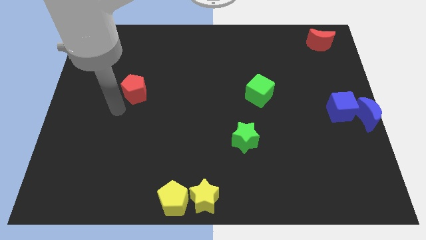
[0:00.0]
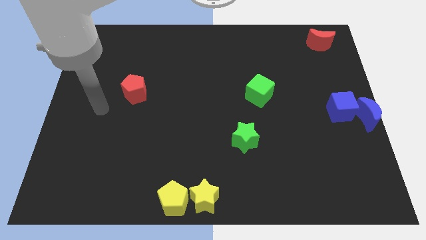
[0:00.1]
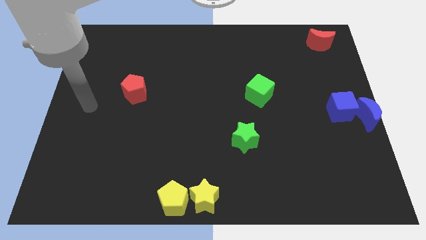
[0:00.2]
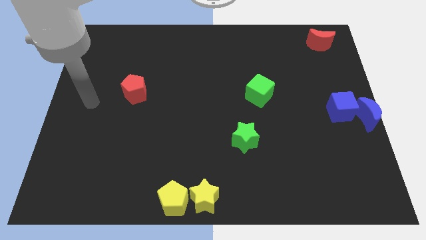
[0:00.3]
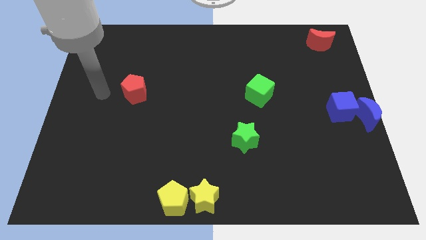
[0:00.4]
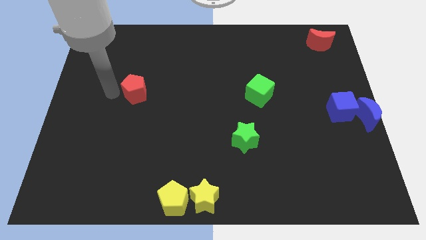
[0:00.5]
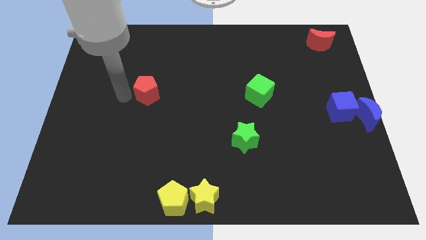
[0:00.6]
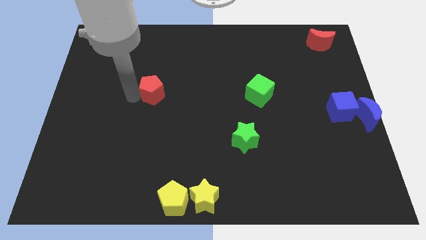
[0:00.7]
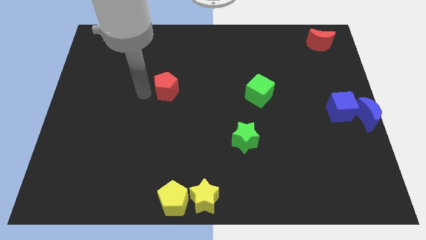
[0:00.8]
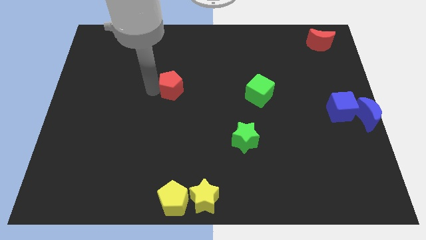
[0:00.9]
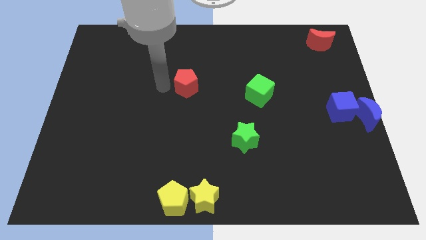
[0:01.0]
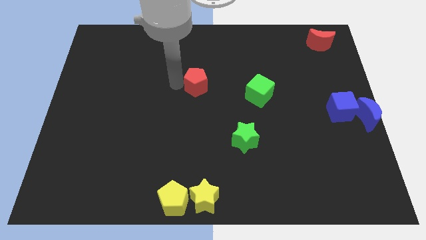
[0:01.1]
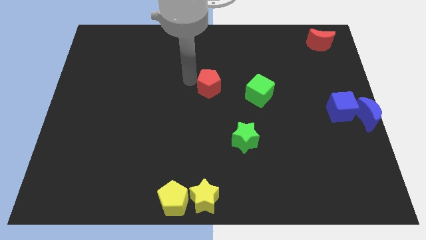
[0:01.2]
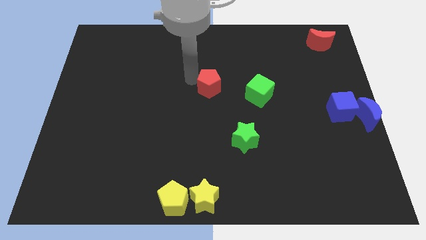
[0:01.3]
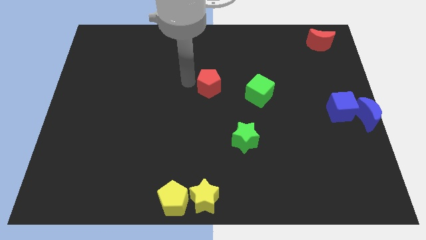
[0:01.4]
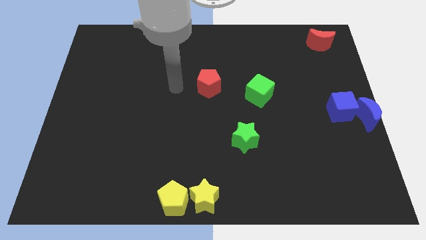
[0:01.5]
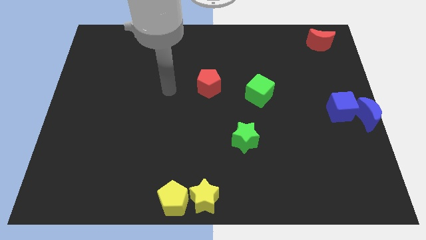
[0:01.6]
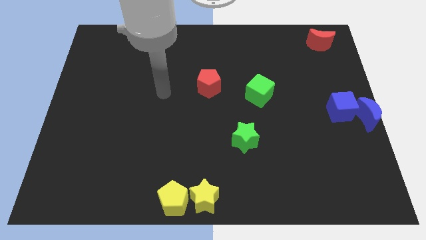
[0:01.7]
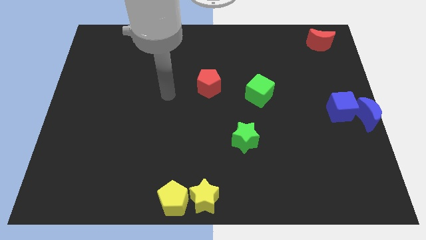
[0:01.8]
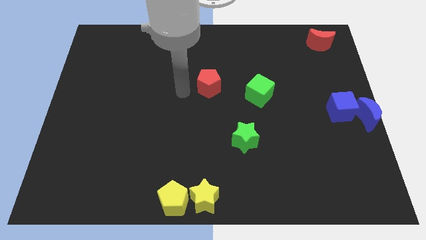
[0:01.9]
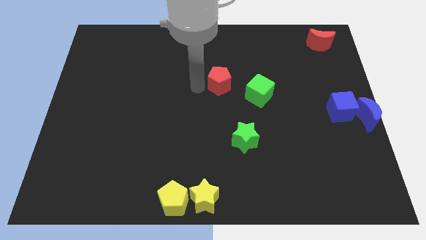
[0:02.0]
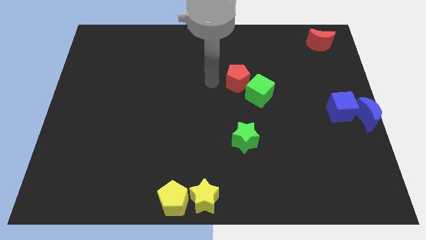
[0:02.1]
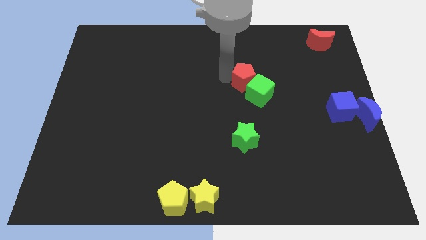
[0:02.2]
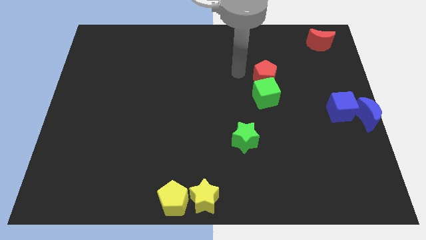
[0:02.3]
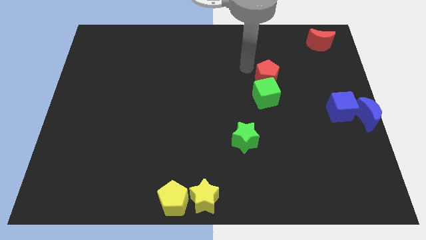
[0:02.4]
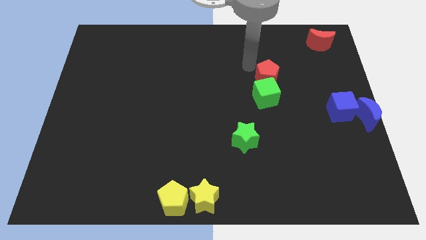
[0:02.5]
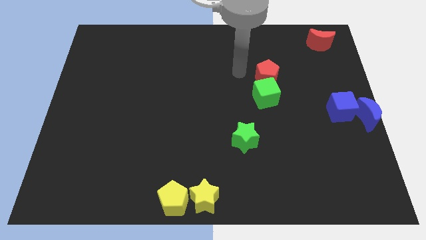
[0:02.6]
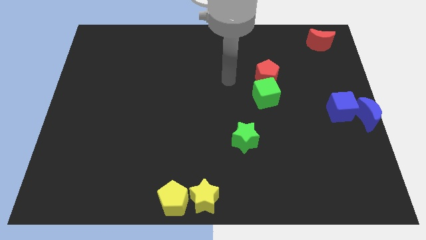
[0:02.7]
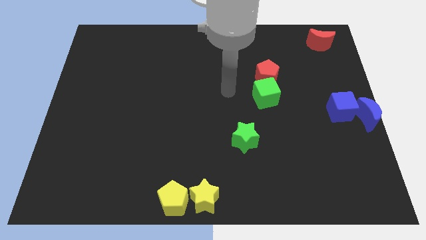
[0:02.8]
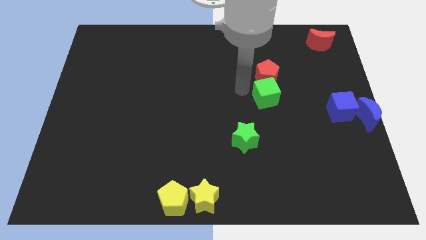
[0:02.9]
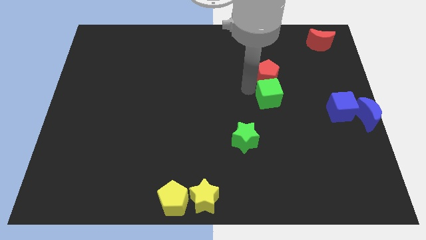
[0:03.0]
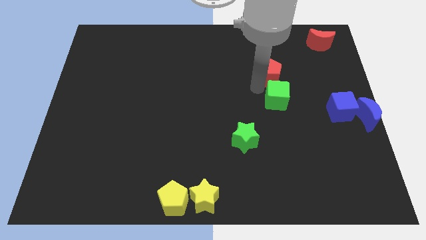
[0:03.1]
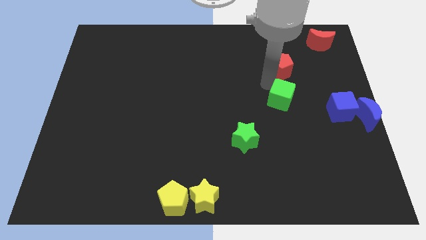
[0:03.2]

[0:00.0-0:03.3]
slide the red pentagon to the top of the green cube

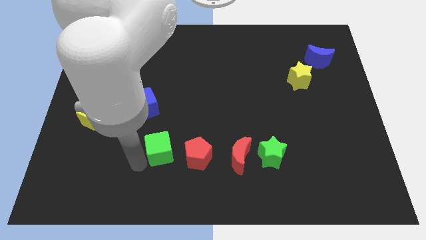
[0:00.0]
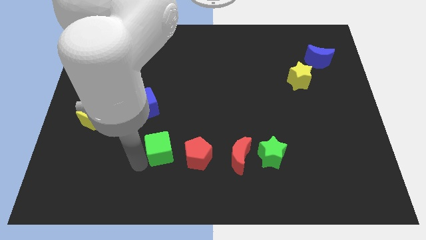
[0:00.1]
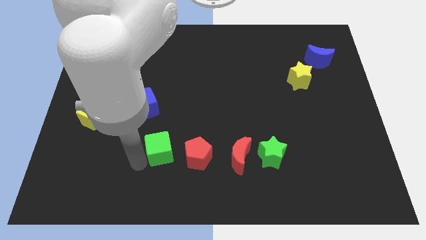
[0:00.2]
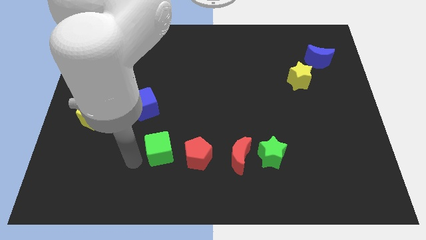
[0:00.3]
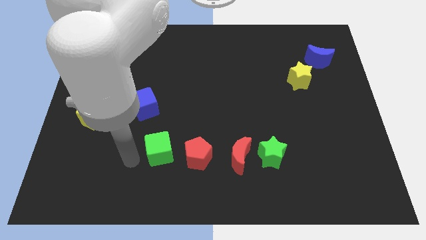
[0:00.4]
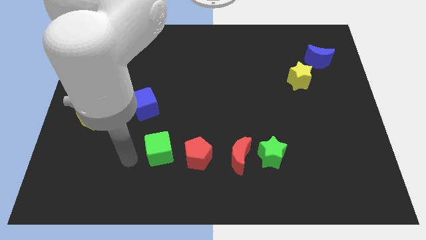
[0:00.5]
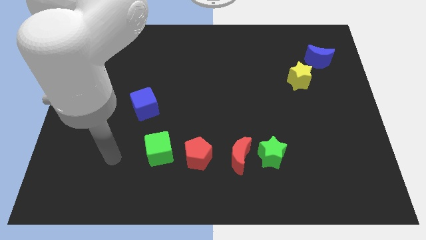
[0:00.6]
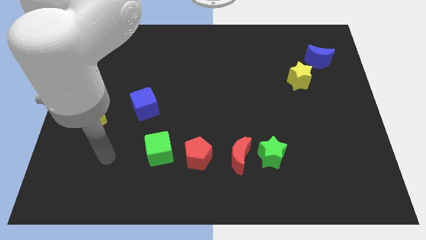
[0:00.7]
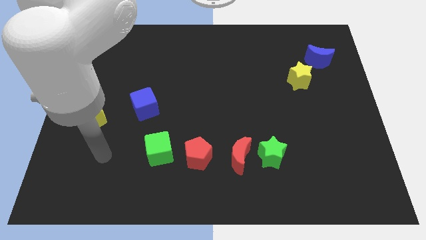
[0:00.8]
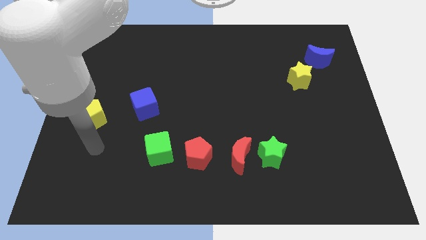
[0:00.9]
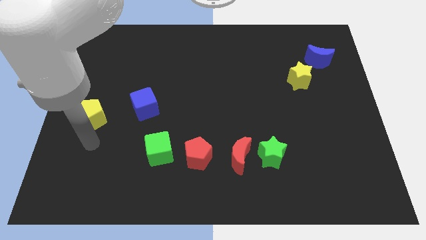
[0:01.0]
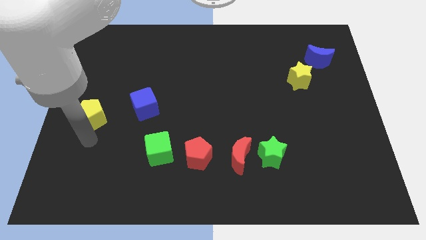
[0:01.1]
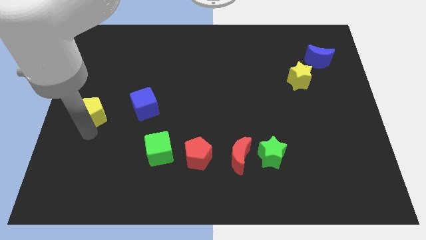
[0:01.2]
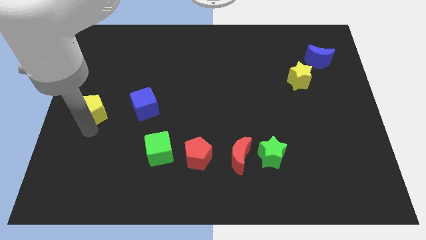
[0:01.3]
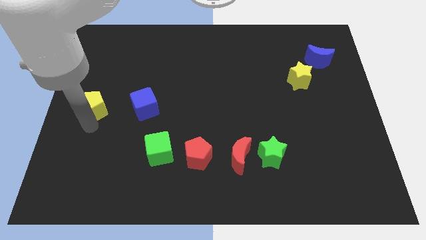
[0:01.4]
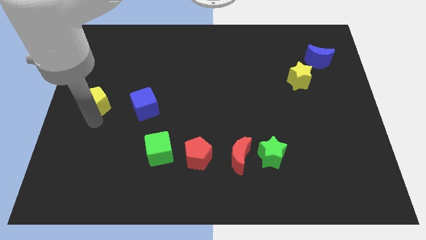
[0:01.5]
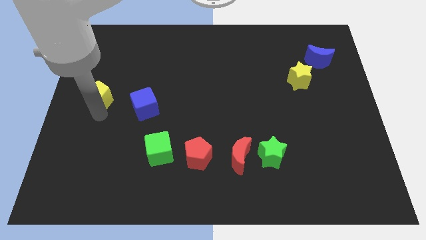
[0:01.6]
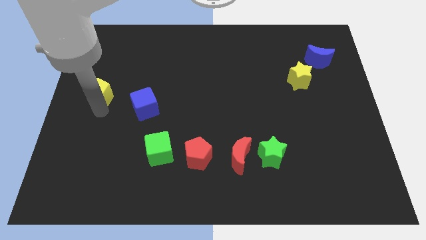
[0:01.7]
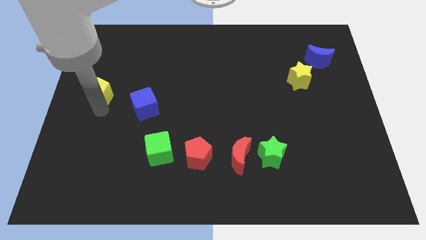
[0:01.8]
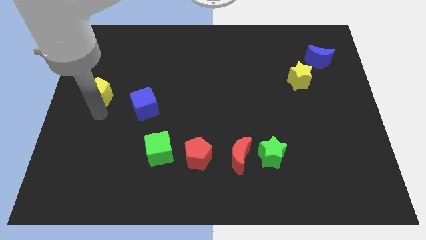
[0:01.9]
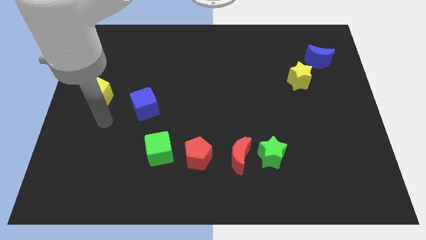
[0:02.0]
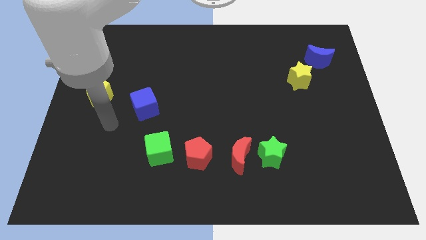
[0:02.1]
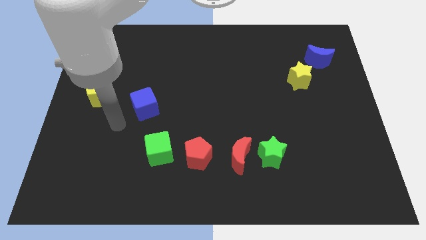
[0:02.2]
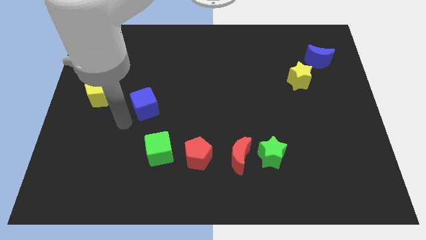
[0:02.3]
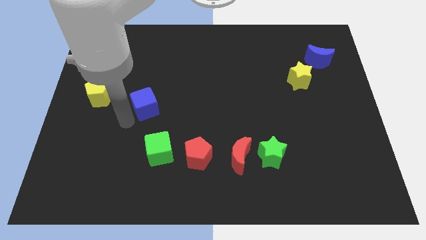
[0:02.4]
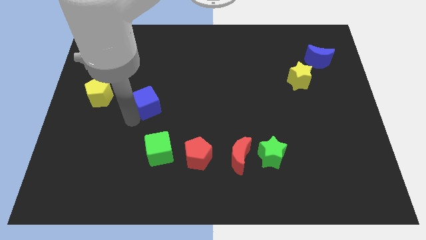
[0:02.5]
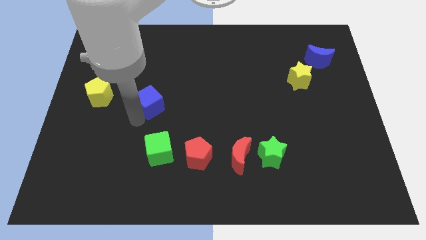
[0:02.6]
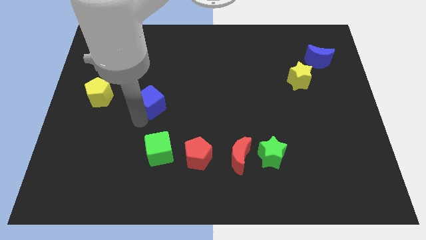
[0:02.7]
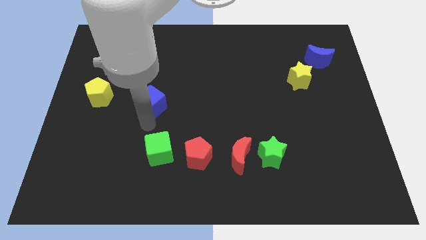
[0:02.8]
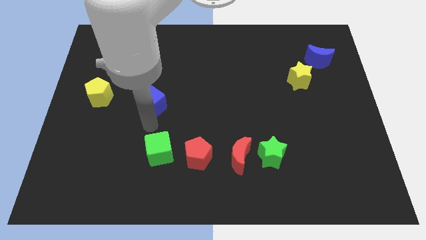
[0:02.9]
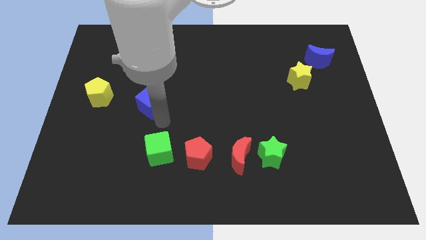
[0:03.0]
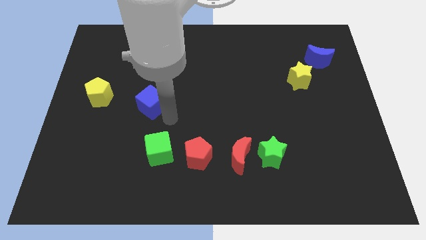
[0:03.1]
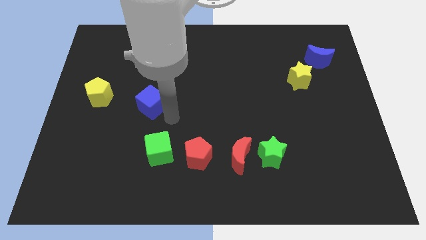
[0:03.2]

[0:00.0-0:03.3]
move the yellow pentagon slightly upwards and go away

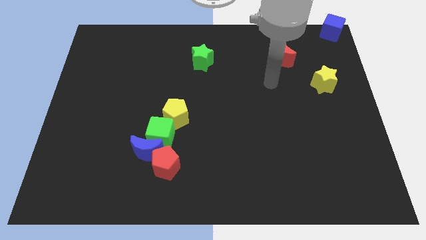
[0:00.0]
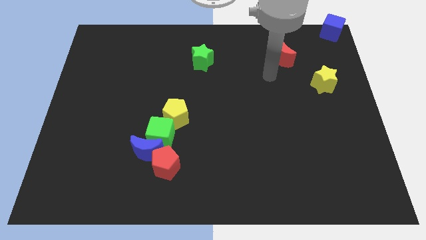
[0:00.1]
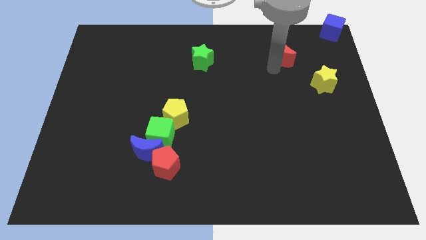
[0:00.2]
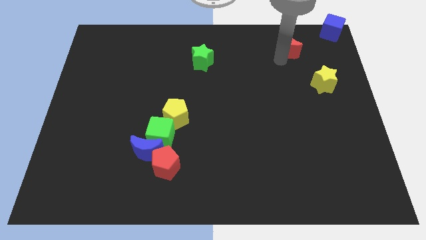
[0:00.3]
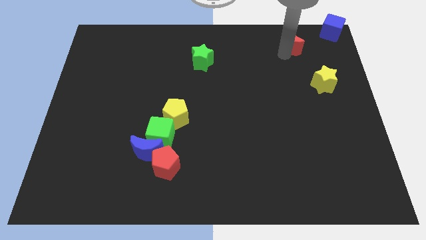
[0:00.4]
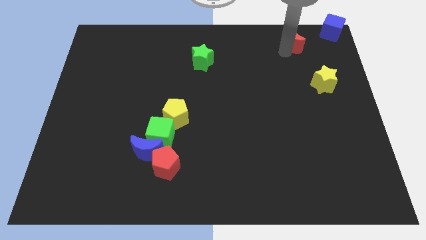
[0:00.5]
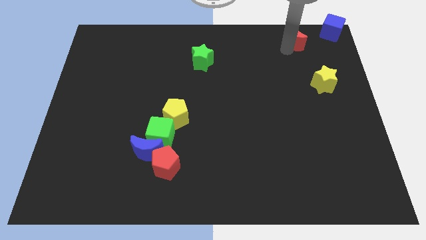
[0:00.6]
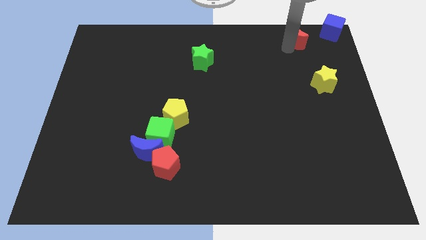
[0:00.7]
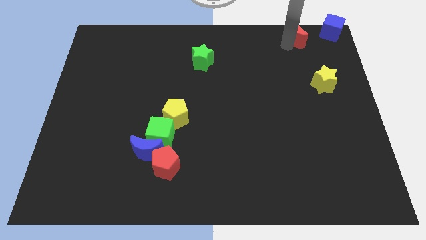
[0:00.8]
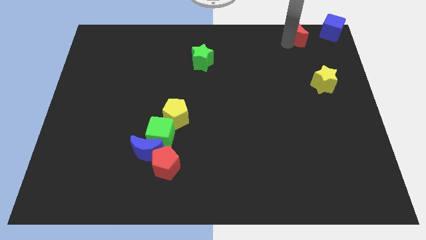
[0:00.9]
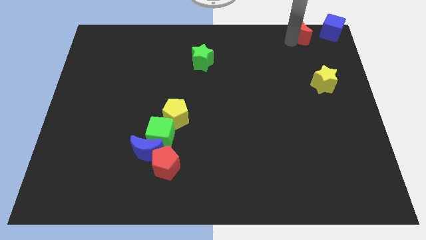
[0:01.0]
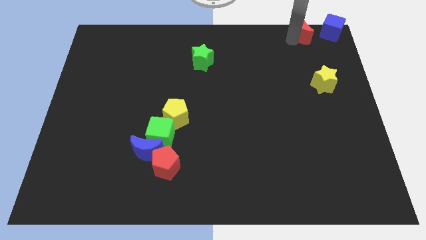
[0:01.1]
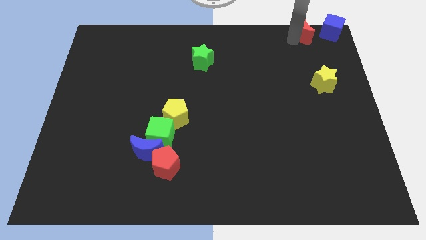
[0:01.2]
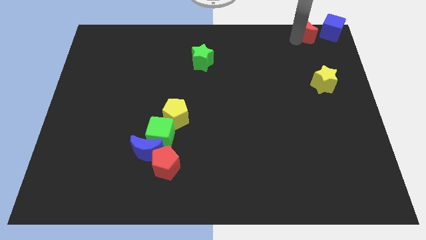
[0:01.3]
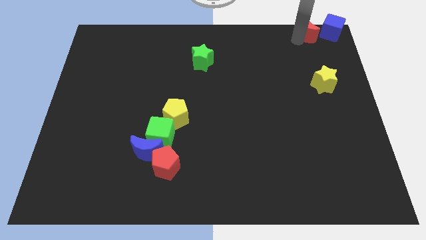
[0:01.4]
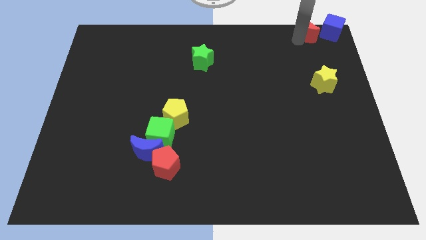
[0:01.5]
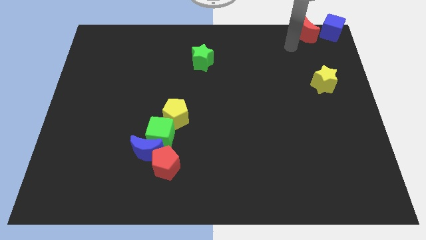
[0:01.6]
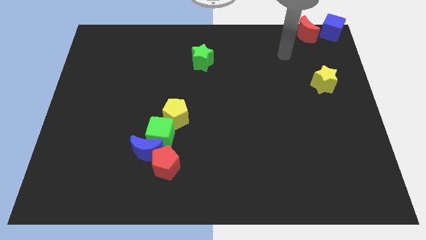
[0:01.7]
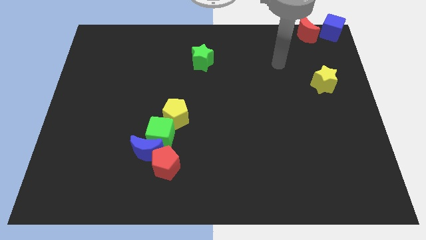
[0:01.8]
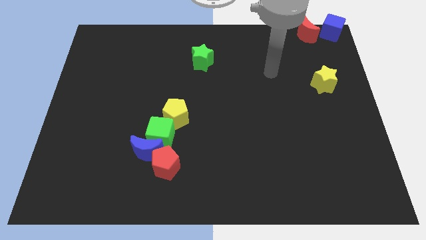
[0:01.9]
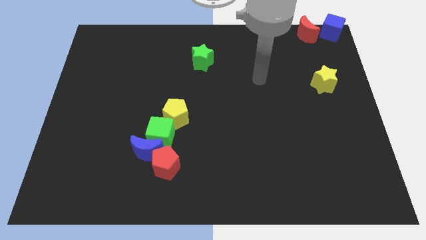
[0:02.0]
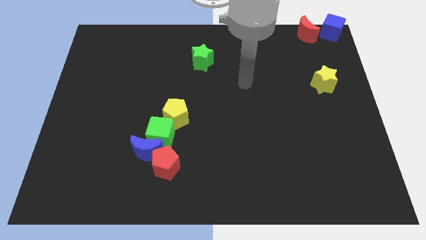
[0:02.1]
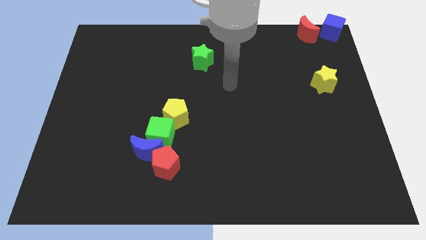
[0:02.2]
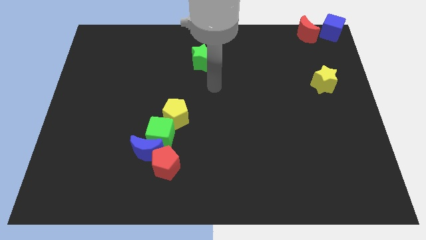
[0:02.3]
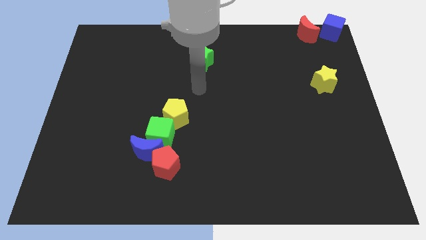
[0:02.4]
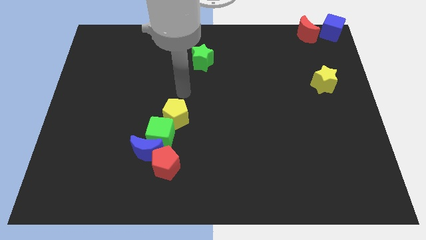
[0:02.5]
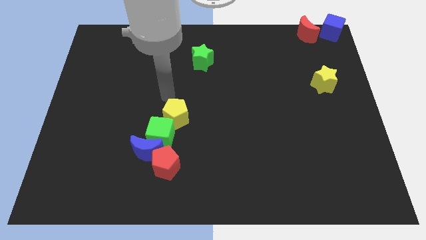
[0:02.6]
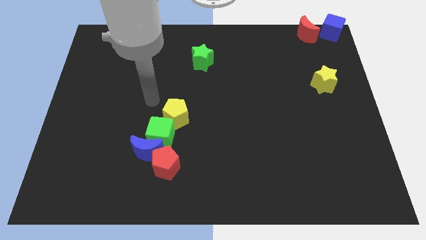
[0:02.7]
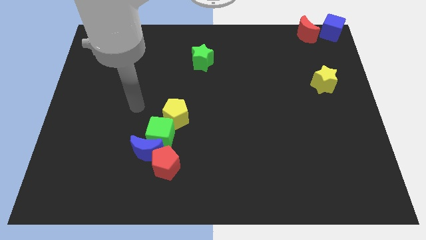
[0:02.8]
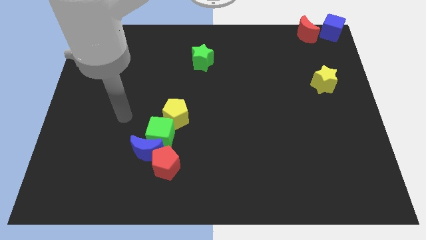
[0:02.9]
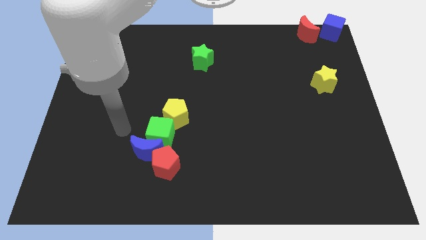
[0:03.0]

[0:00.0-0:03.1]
move the red crescent to the left side of the blue cube
